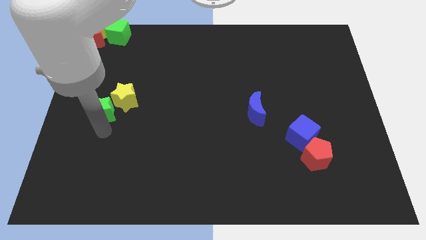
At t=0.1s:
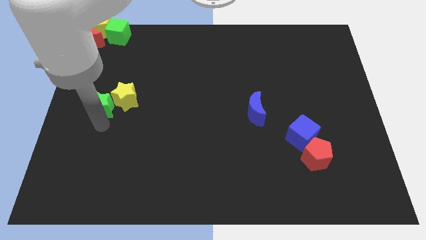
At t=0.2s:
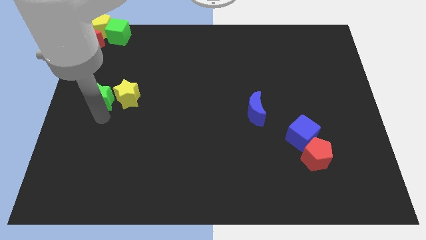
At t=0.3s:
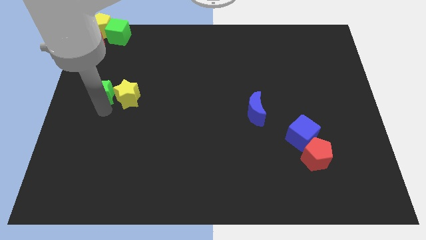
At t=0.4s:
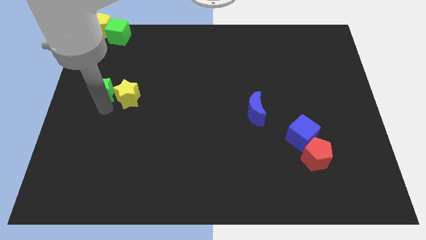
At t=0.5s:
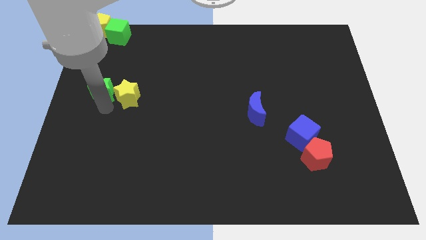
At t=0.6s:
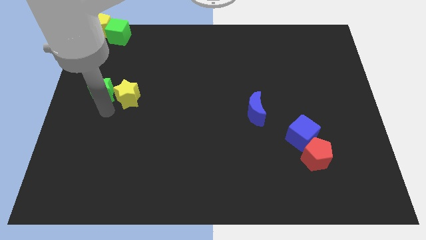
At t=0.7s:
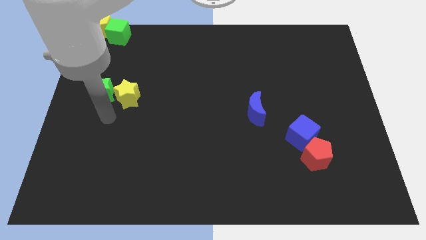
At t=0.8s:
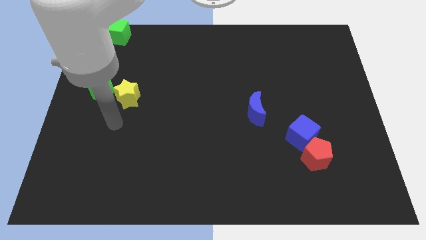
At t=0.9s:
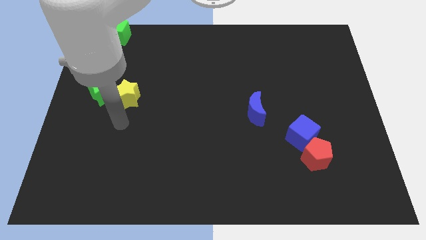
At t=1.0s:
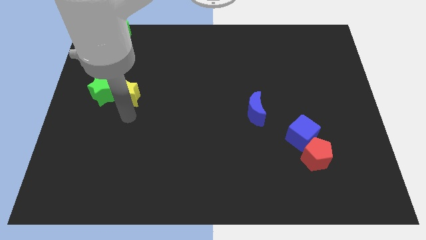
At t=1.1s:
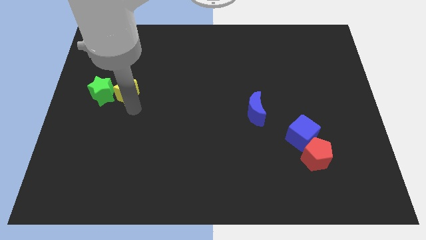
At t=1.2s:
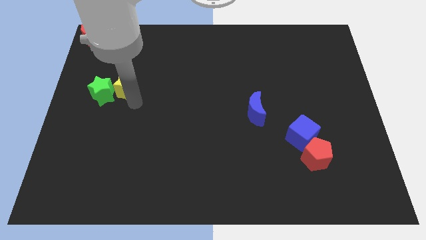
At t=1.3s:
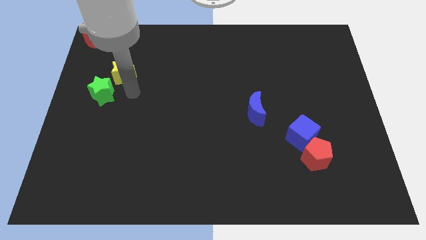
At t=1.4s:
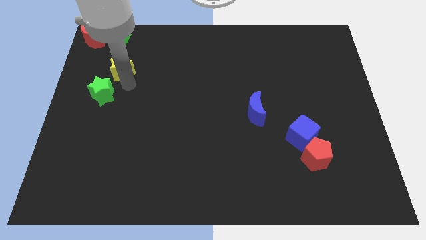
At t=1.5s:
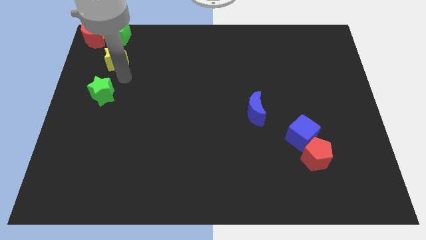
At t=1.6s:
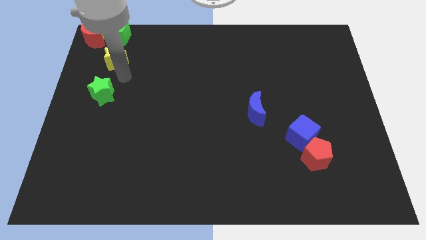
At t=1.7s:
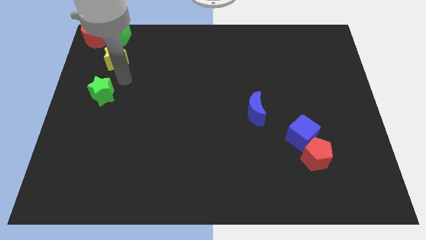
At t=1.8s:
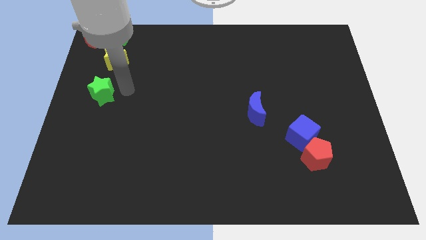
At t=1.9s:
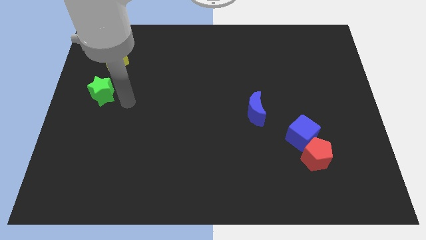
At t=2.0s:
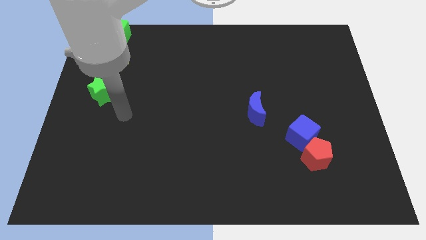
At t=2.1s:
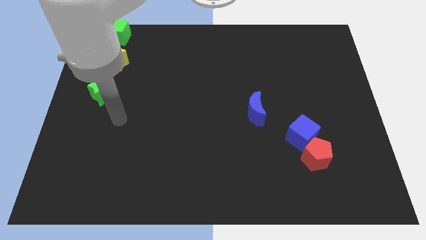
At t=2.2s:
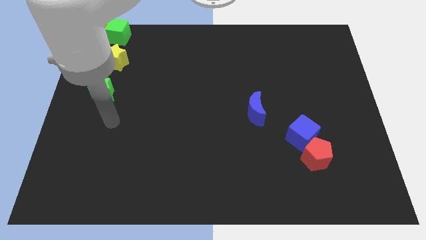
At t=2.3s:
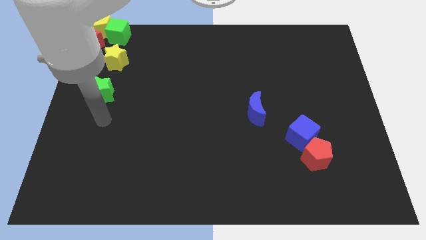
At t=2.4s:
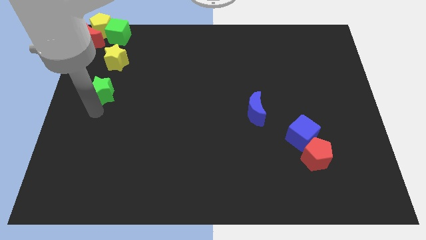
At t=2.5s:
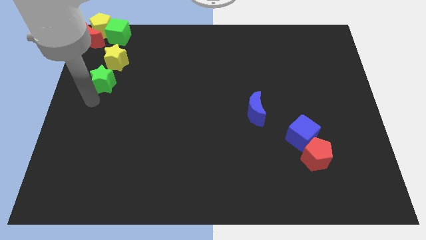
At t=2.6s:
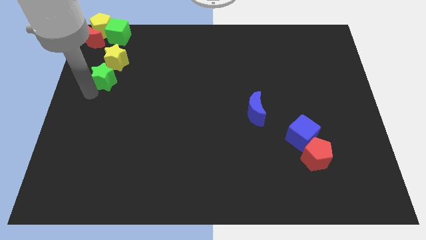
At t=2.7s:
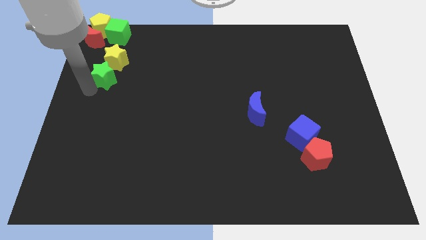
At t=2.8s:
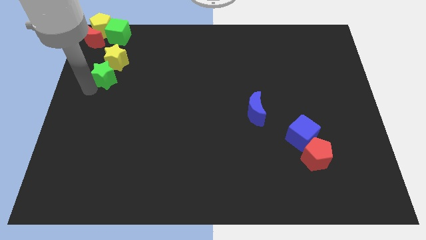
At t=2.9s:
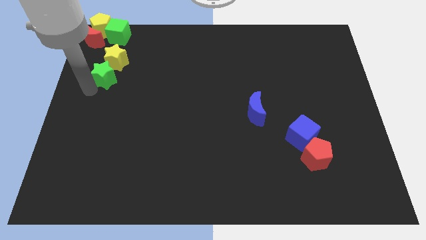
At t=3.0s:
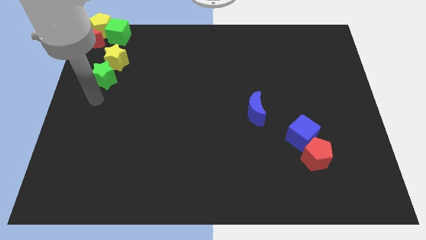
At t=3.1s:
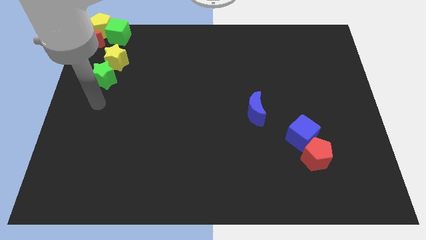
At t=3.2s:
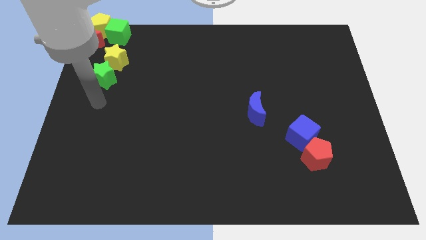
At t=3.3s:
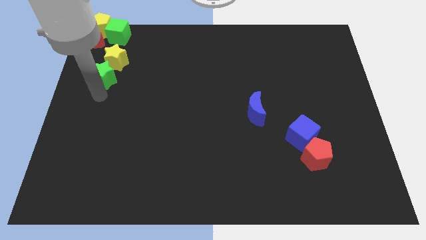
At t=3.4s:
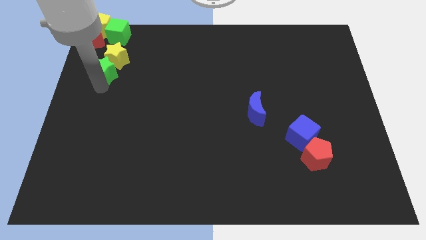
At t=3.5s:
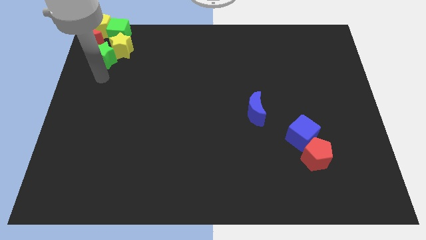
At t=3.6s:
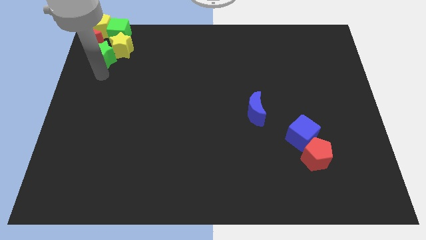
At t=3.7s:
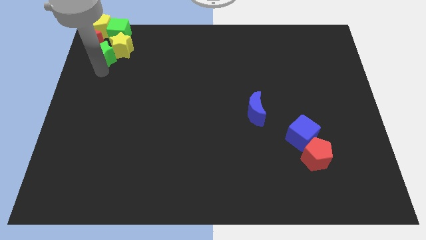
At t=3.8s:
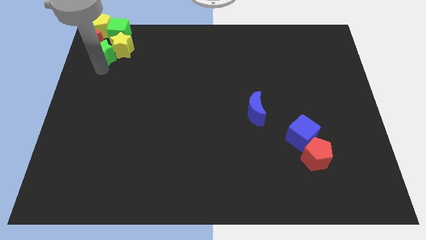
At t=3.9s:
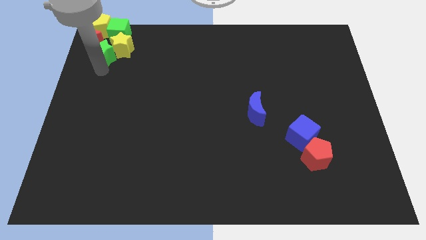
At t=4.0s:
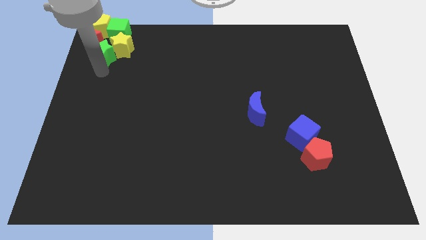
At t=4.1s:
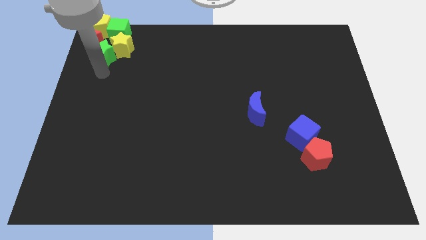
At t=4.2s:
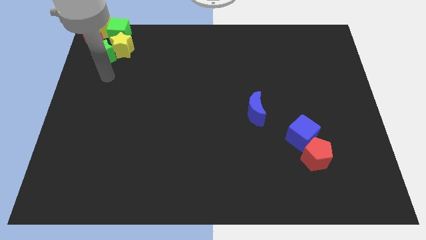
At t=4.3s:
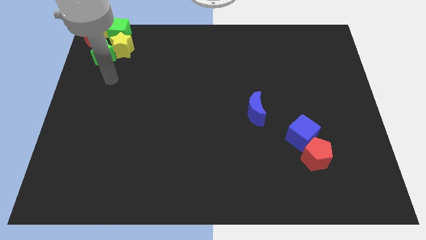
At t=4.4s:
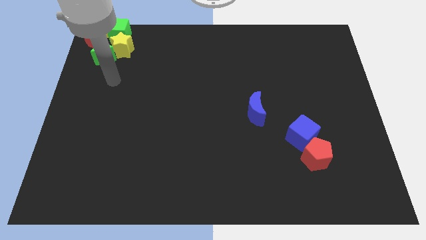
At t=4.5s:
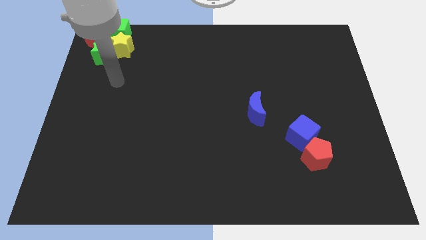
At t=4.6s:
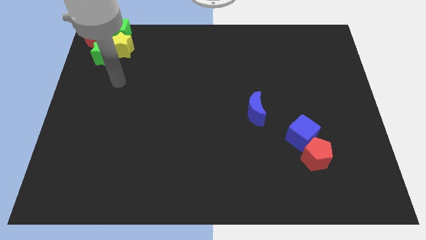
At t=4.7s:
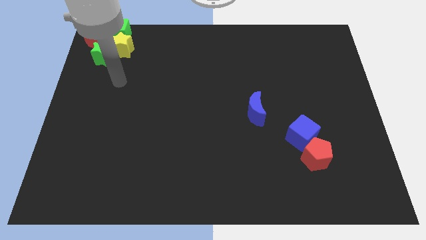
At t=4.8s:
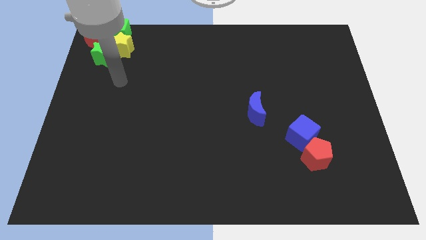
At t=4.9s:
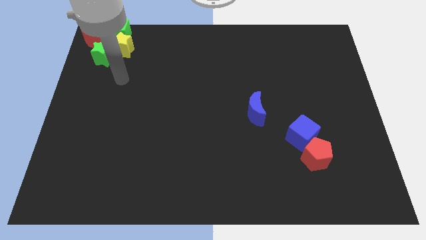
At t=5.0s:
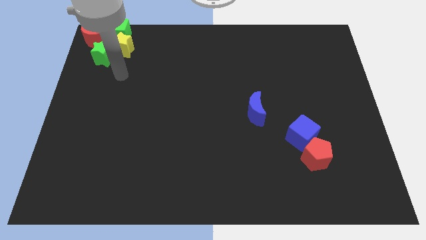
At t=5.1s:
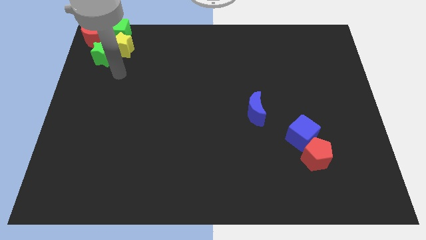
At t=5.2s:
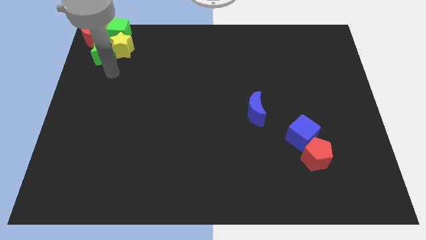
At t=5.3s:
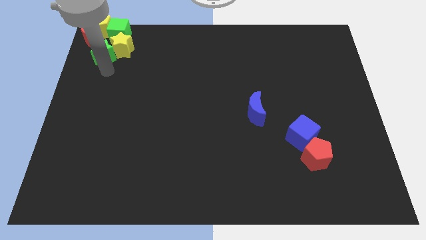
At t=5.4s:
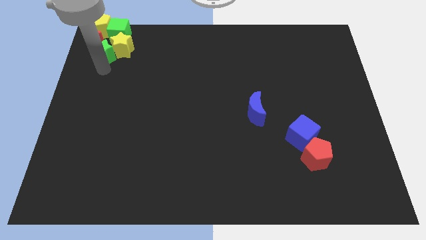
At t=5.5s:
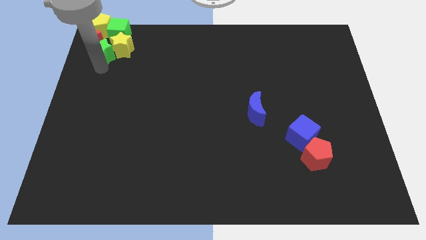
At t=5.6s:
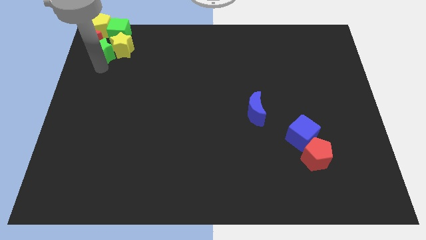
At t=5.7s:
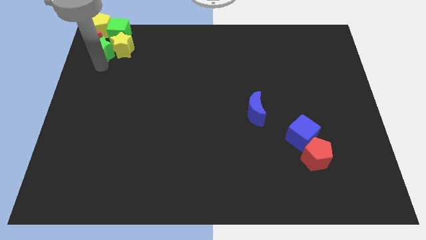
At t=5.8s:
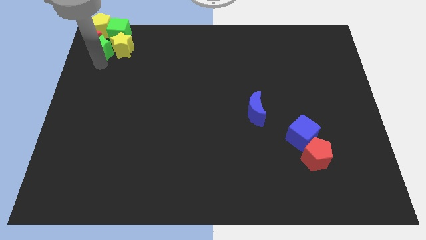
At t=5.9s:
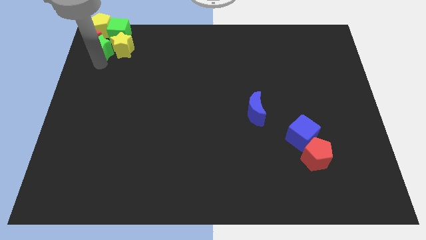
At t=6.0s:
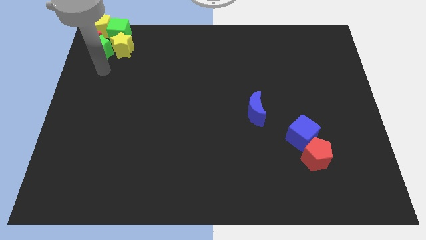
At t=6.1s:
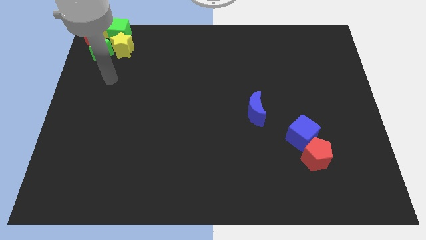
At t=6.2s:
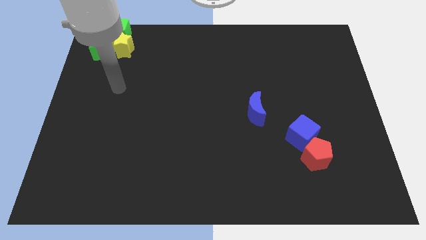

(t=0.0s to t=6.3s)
move the yellow and green stars into the group of blocks

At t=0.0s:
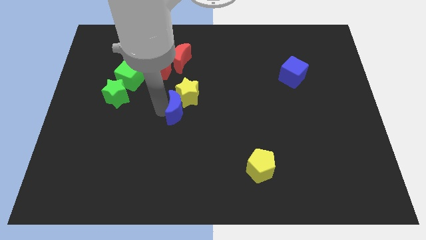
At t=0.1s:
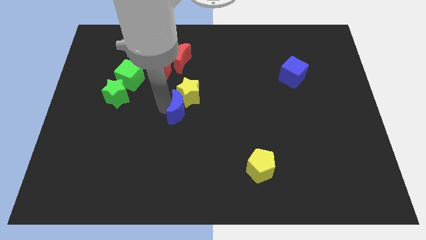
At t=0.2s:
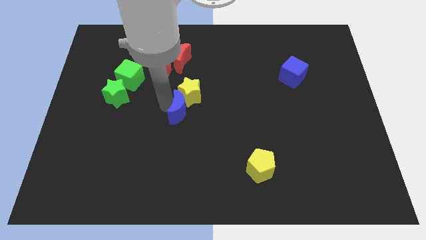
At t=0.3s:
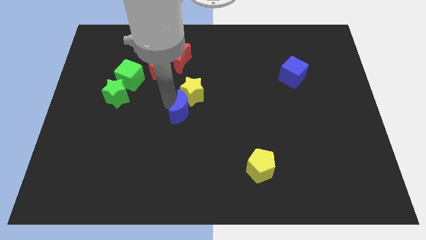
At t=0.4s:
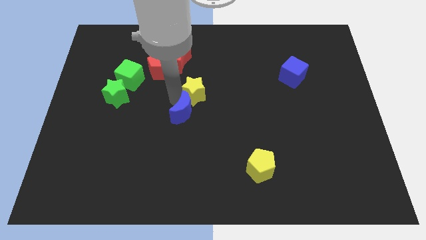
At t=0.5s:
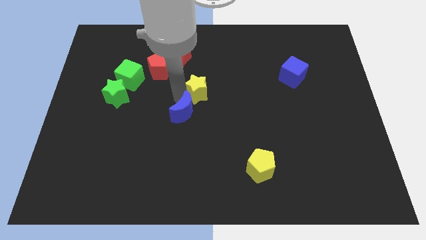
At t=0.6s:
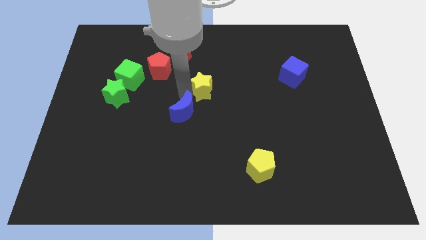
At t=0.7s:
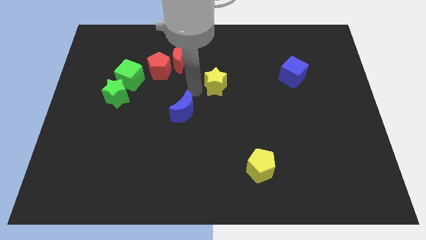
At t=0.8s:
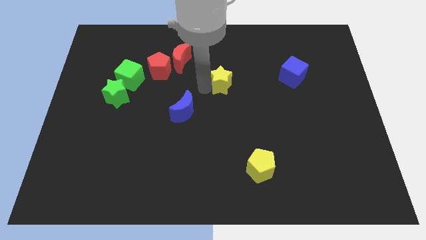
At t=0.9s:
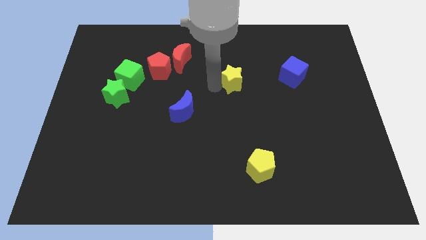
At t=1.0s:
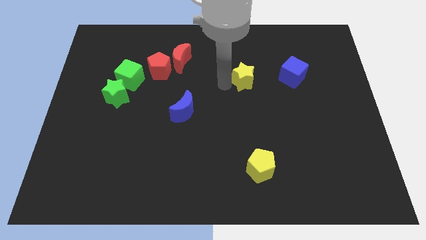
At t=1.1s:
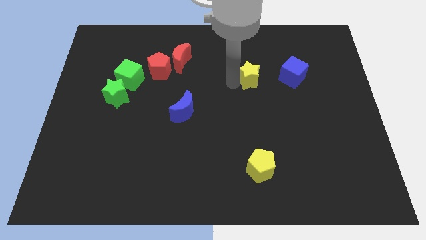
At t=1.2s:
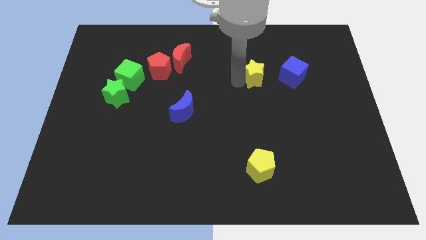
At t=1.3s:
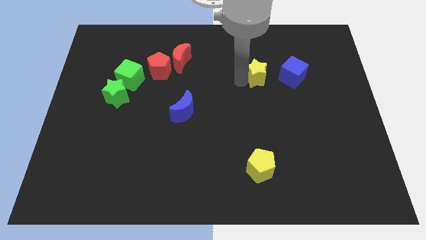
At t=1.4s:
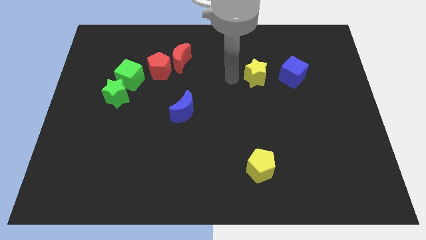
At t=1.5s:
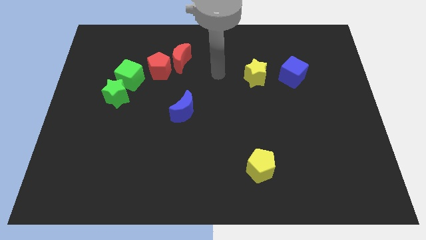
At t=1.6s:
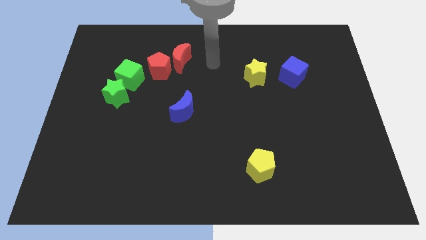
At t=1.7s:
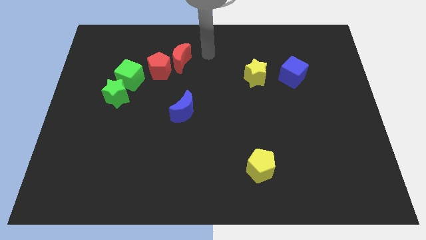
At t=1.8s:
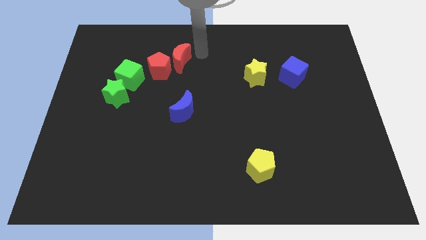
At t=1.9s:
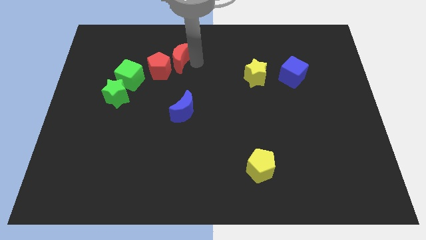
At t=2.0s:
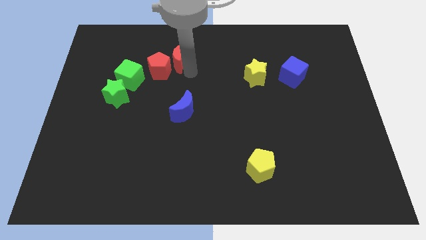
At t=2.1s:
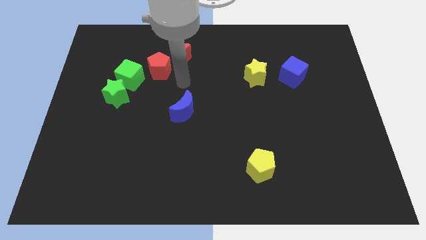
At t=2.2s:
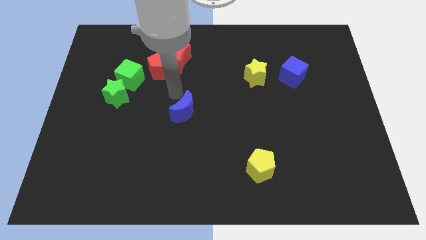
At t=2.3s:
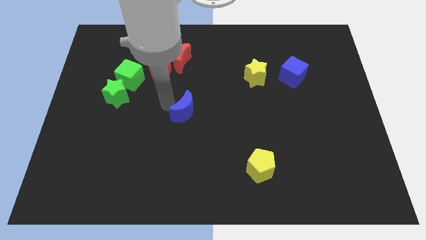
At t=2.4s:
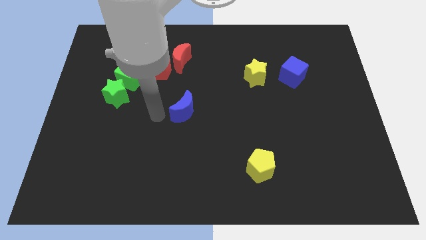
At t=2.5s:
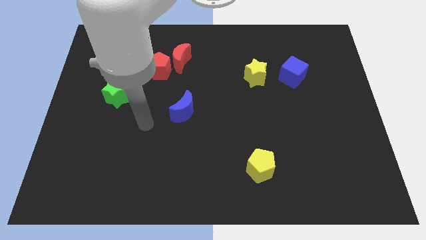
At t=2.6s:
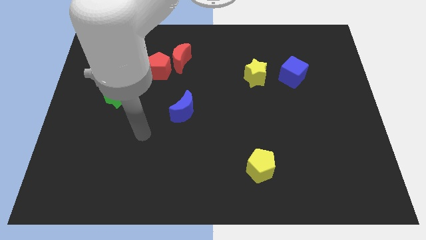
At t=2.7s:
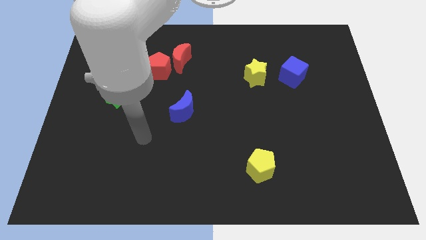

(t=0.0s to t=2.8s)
move the yellow star towards the blue cube
